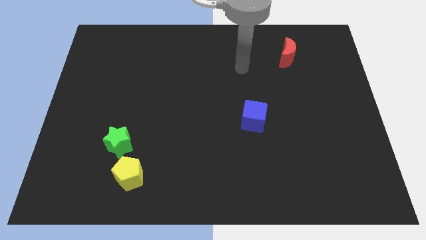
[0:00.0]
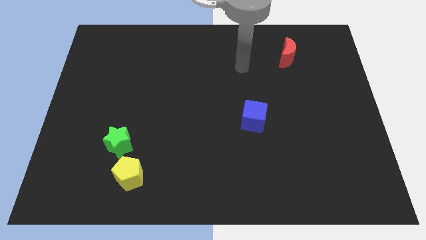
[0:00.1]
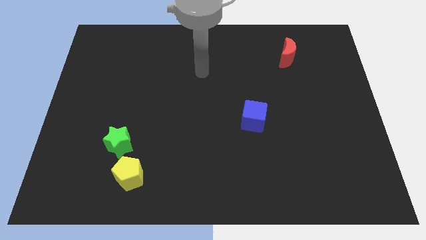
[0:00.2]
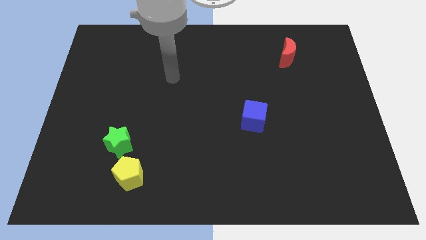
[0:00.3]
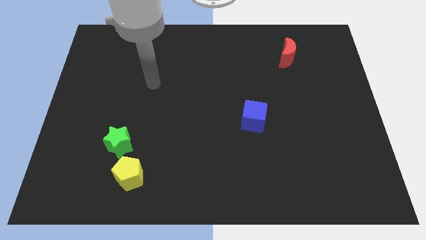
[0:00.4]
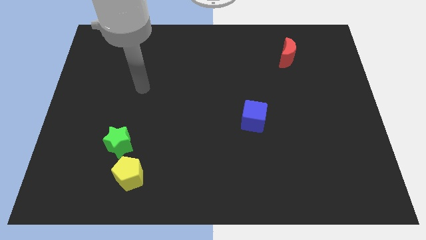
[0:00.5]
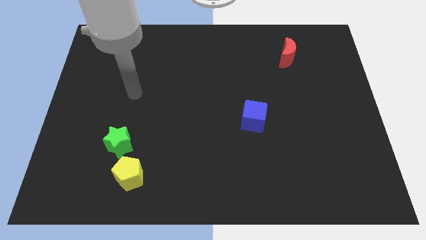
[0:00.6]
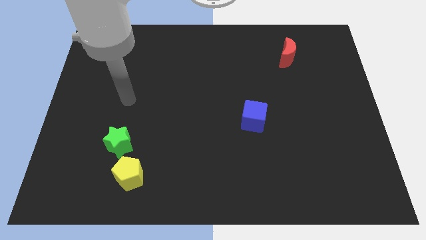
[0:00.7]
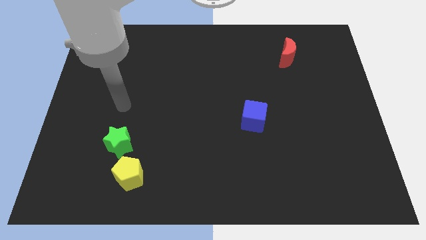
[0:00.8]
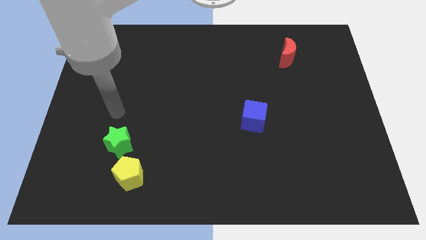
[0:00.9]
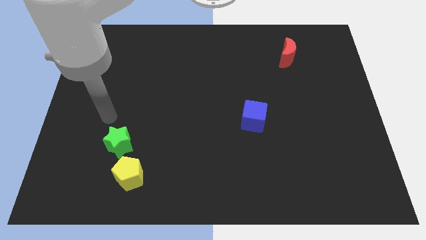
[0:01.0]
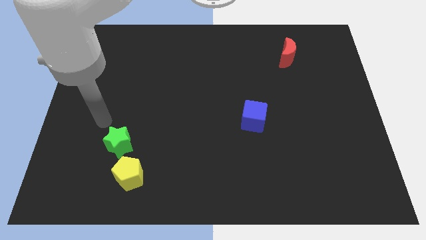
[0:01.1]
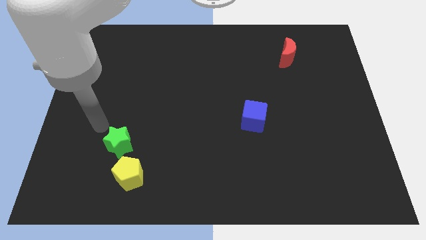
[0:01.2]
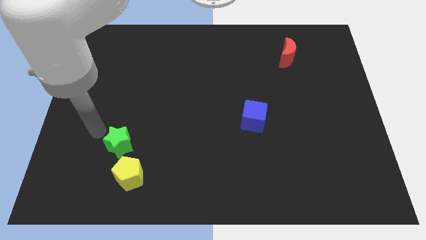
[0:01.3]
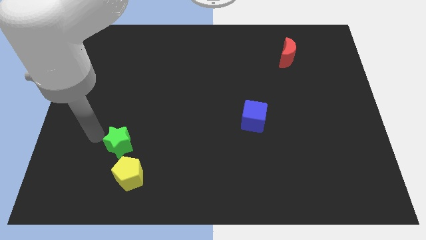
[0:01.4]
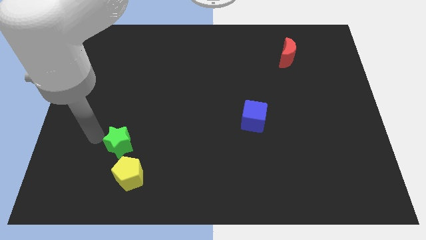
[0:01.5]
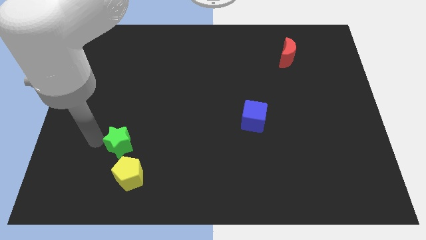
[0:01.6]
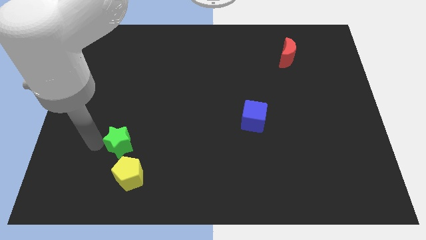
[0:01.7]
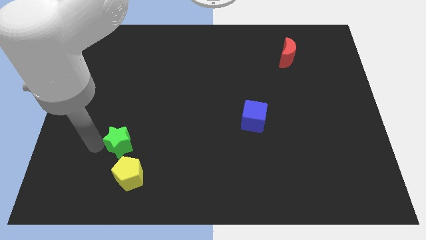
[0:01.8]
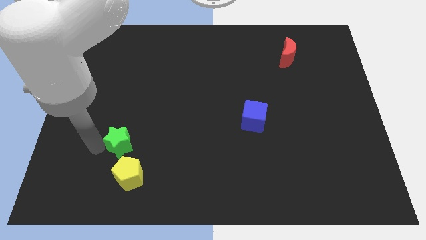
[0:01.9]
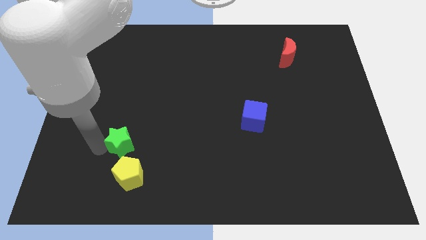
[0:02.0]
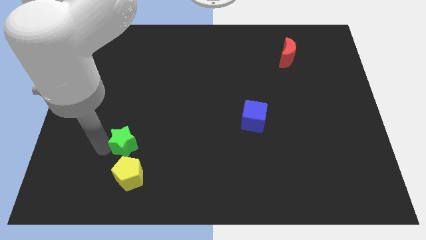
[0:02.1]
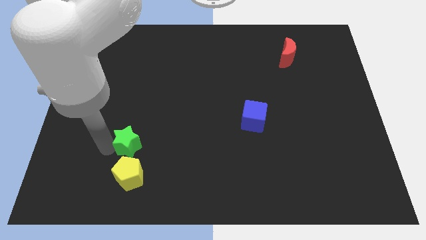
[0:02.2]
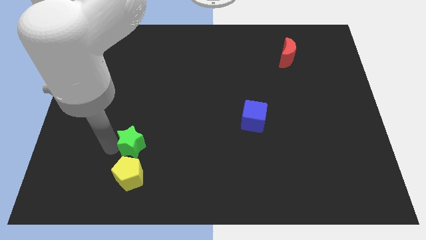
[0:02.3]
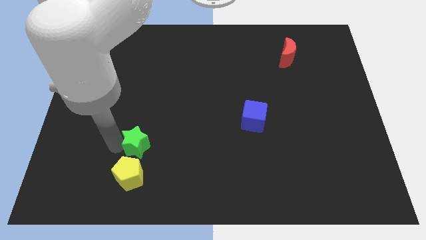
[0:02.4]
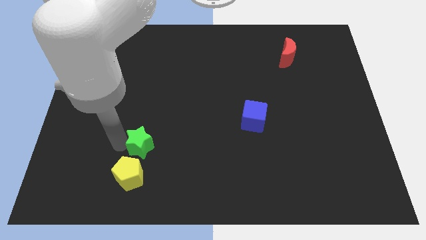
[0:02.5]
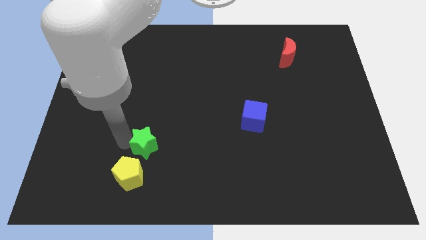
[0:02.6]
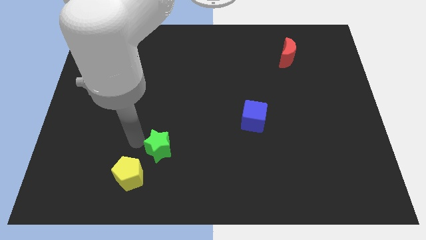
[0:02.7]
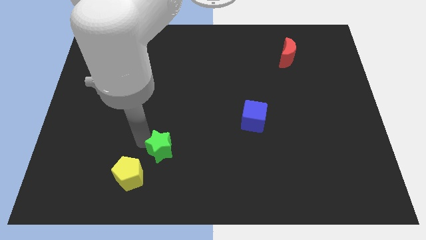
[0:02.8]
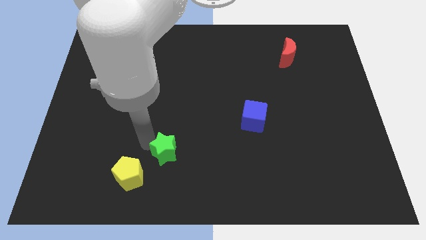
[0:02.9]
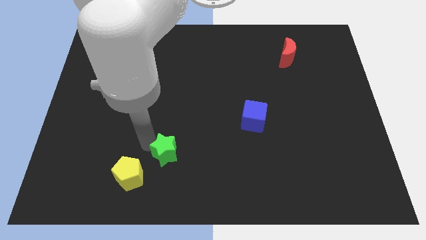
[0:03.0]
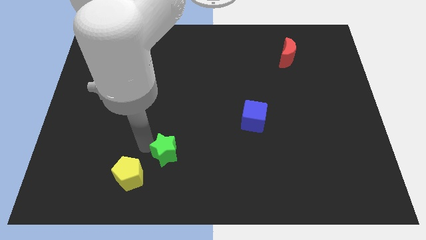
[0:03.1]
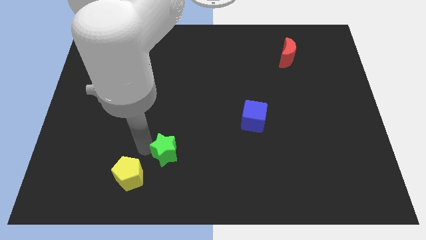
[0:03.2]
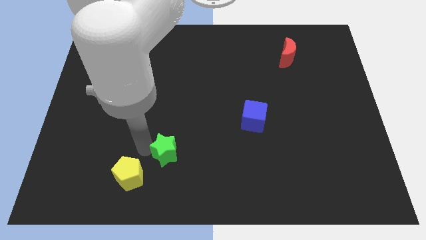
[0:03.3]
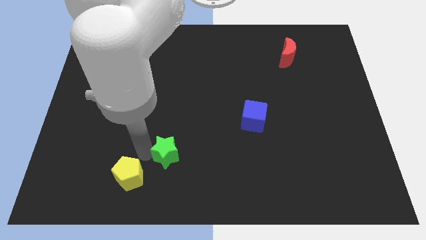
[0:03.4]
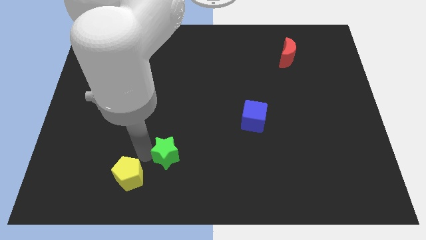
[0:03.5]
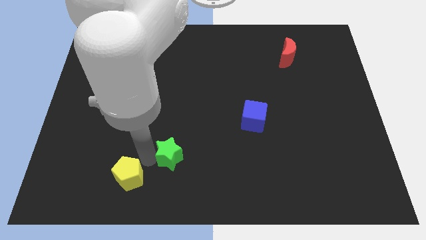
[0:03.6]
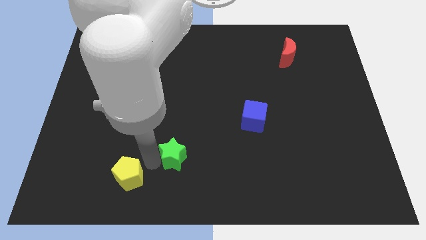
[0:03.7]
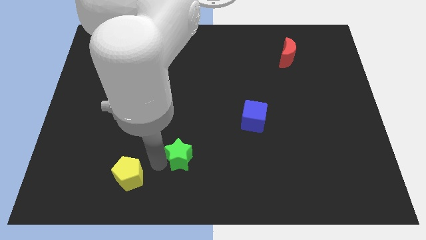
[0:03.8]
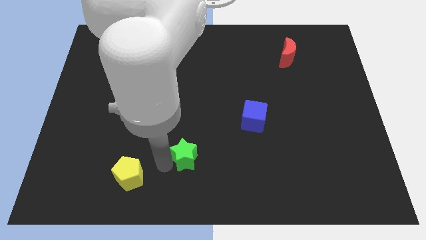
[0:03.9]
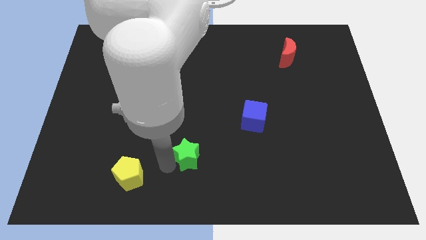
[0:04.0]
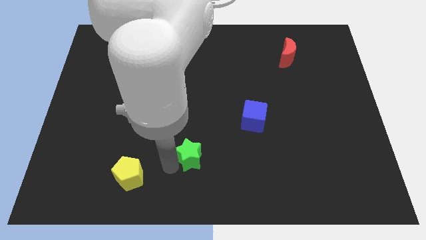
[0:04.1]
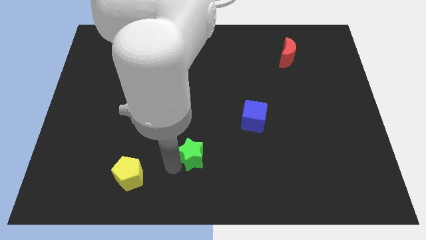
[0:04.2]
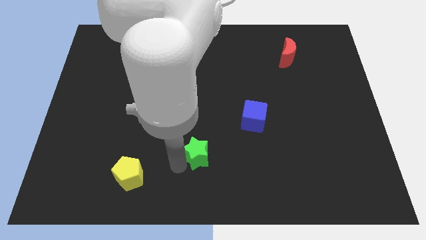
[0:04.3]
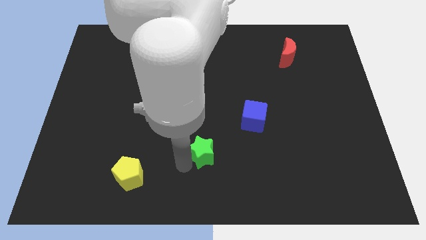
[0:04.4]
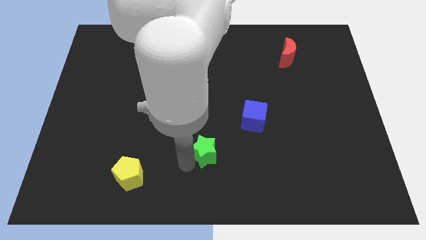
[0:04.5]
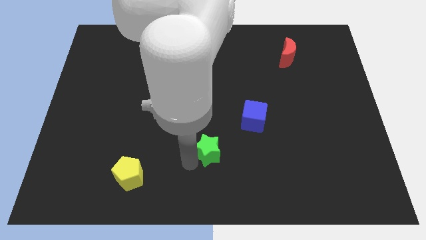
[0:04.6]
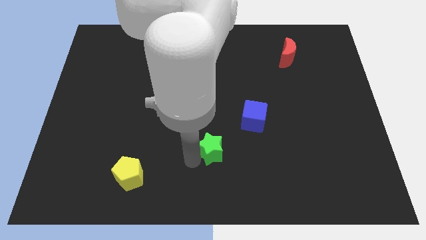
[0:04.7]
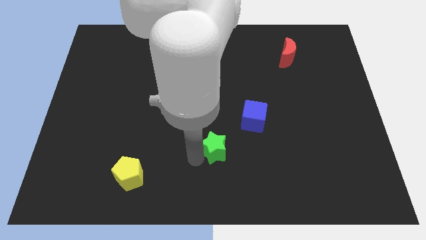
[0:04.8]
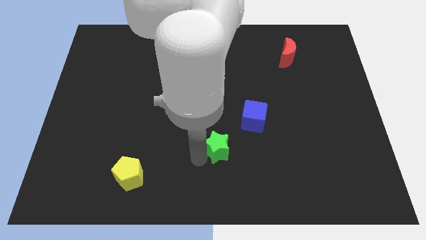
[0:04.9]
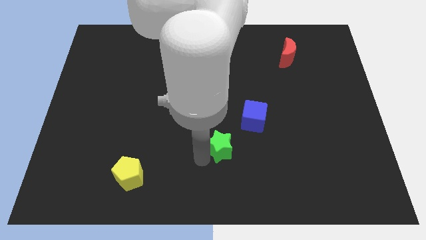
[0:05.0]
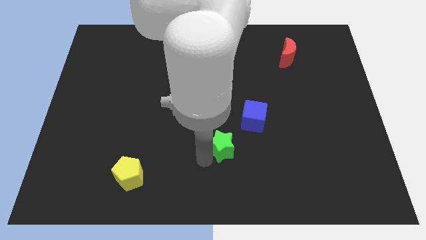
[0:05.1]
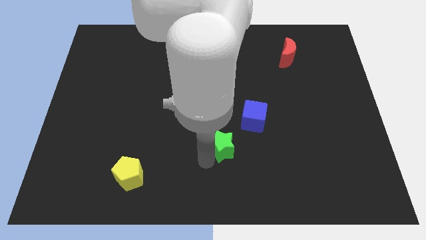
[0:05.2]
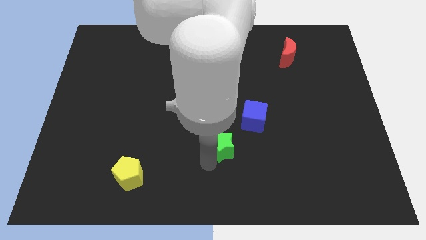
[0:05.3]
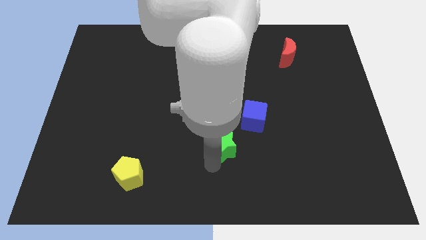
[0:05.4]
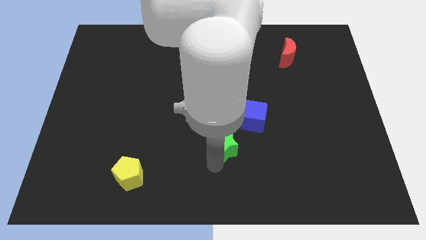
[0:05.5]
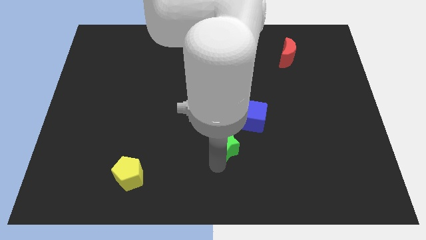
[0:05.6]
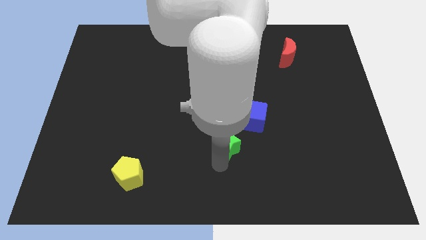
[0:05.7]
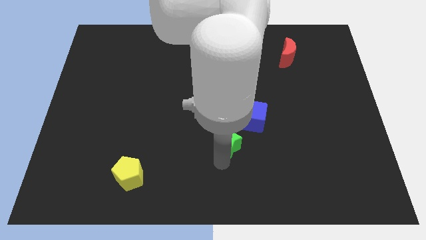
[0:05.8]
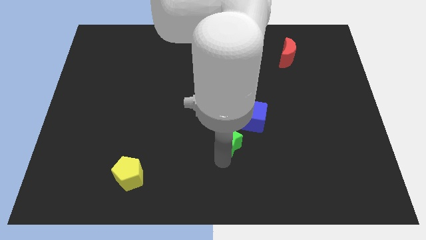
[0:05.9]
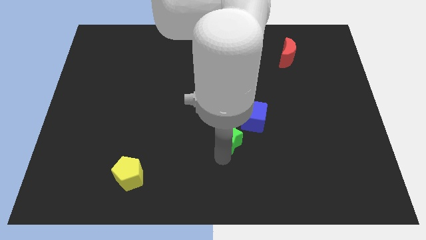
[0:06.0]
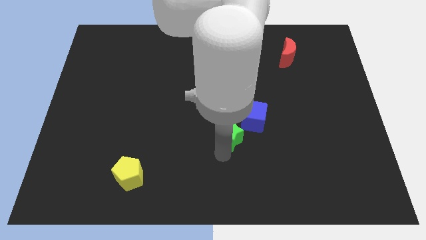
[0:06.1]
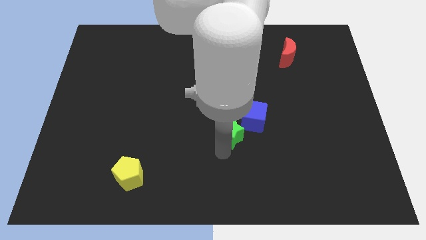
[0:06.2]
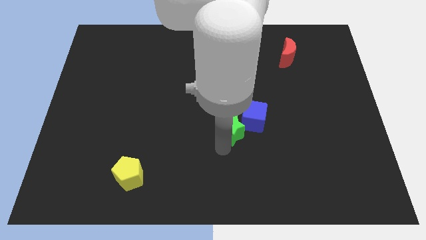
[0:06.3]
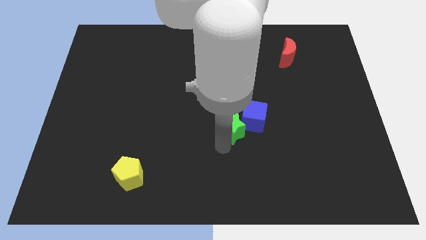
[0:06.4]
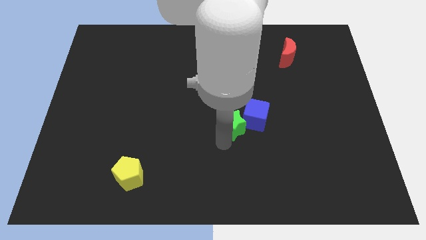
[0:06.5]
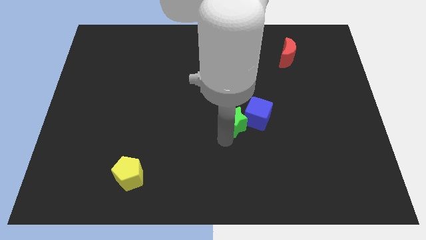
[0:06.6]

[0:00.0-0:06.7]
push the green star close to the blue block

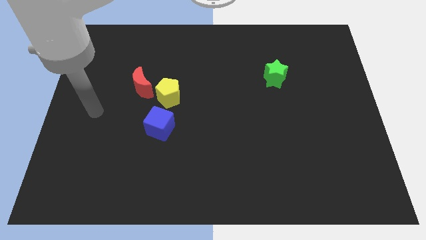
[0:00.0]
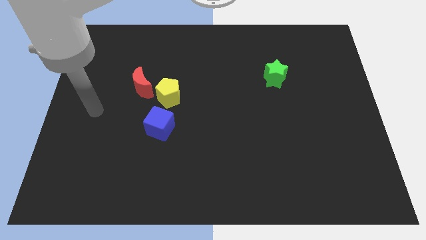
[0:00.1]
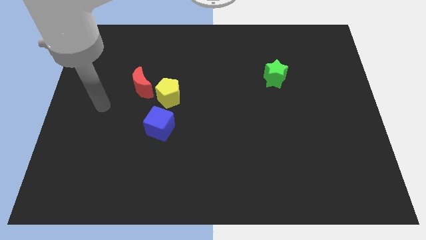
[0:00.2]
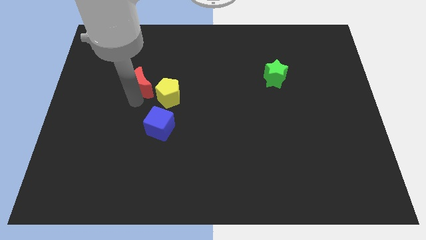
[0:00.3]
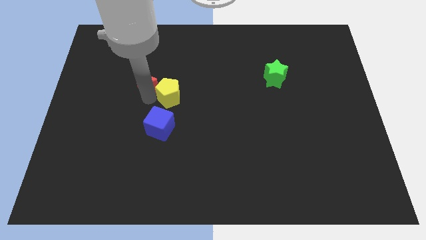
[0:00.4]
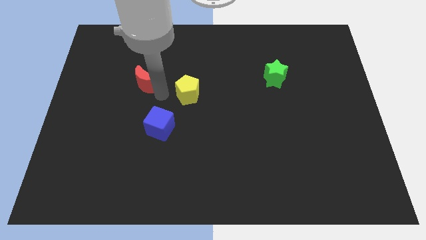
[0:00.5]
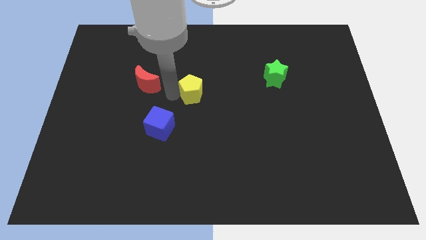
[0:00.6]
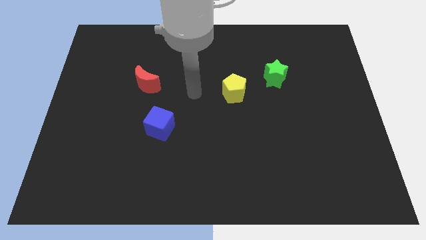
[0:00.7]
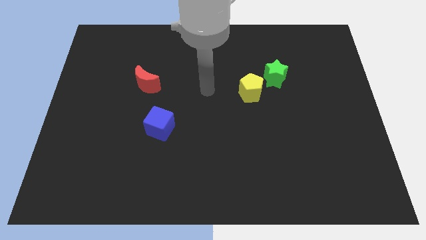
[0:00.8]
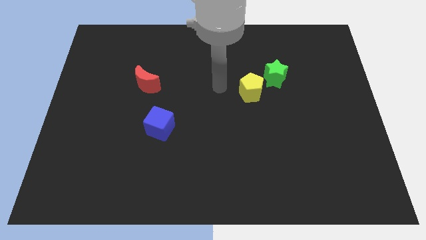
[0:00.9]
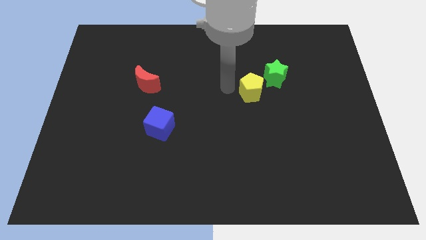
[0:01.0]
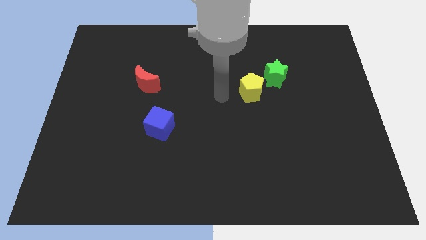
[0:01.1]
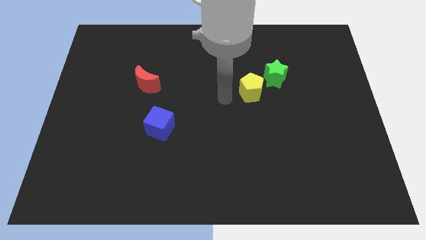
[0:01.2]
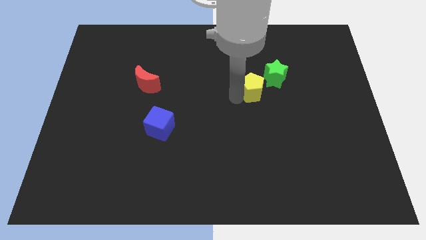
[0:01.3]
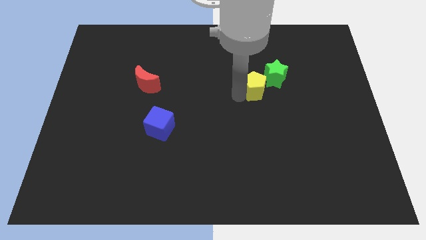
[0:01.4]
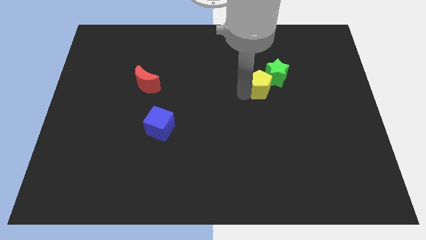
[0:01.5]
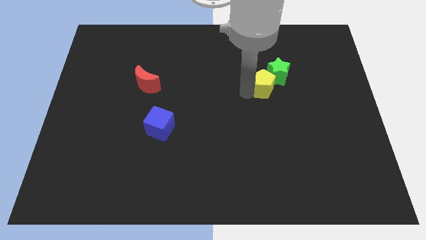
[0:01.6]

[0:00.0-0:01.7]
slide the yellow block next to the green block
